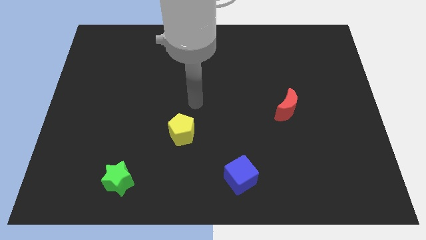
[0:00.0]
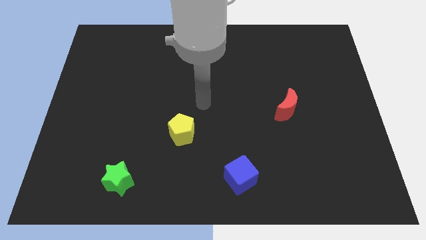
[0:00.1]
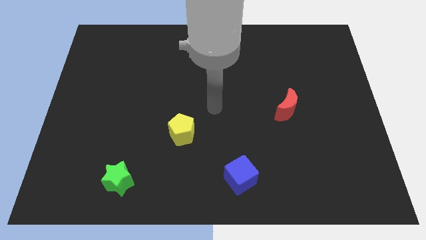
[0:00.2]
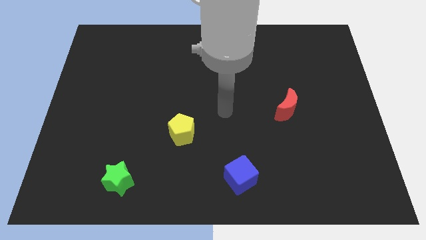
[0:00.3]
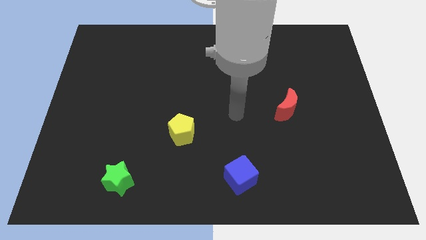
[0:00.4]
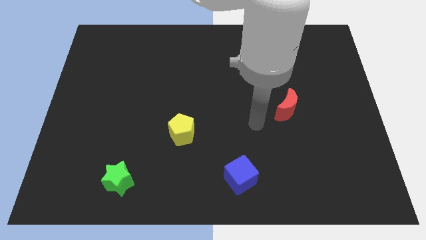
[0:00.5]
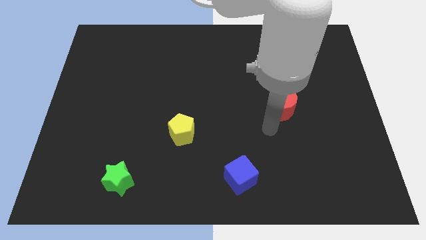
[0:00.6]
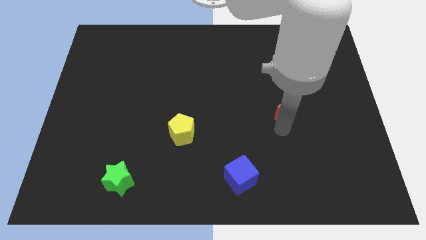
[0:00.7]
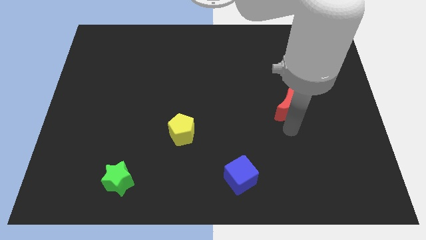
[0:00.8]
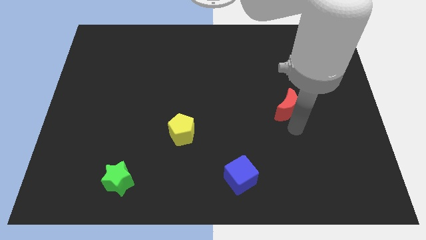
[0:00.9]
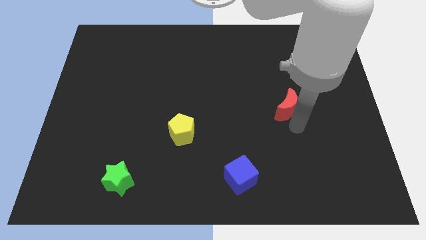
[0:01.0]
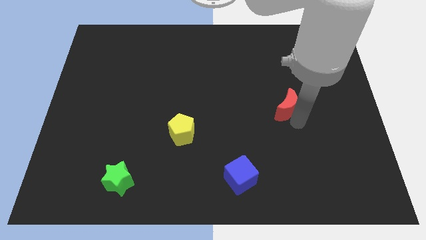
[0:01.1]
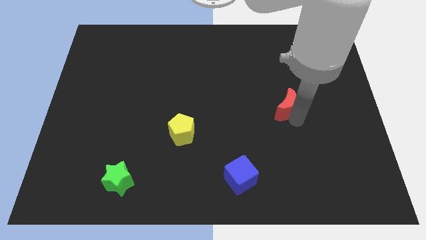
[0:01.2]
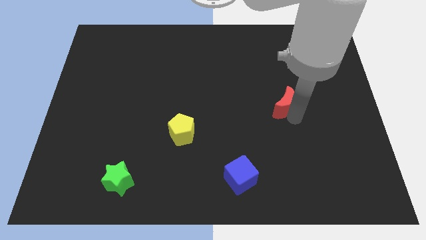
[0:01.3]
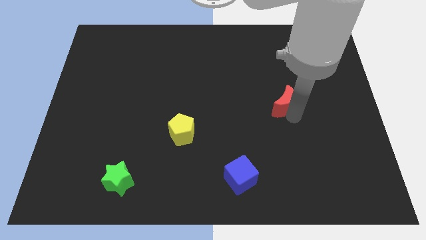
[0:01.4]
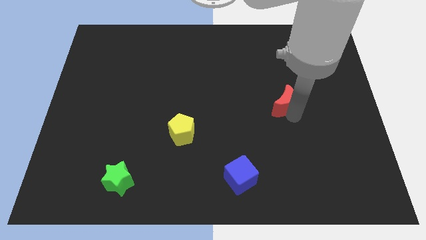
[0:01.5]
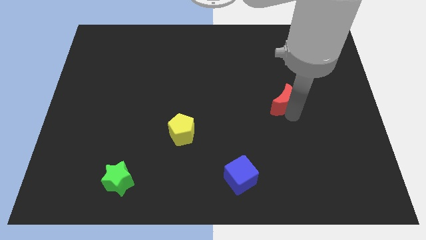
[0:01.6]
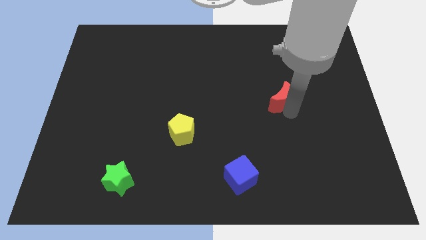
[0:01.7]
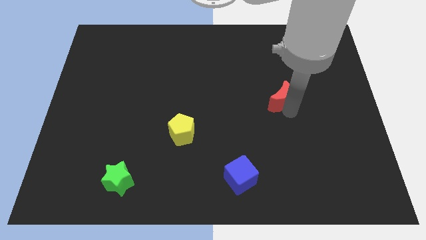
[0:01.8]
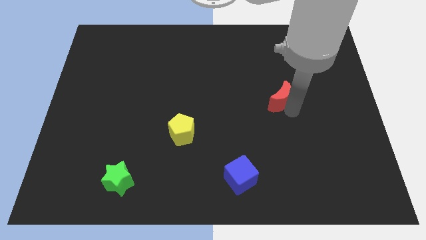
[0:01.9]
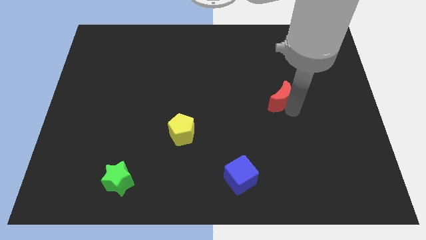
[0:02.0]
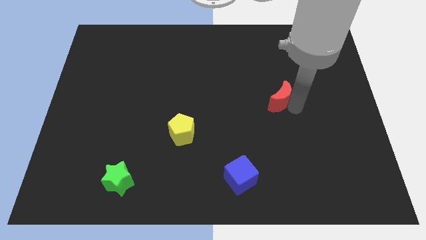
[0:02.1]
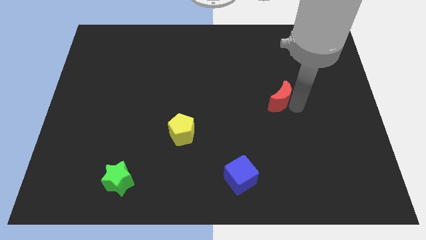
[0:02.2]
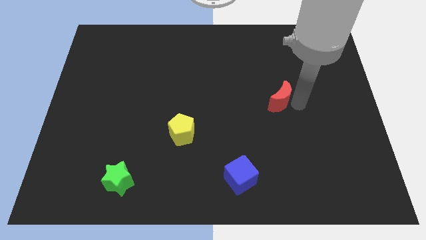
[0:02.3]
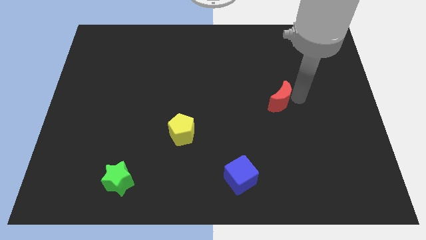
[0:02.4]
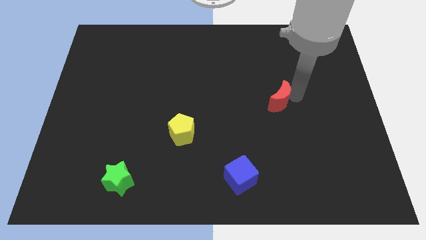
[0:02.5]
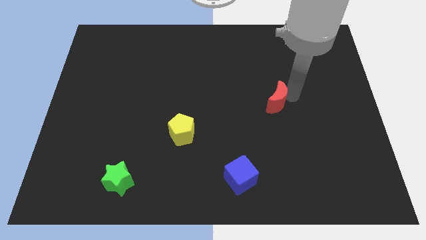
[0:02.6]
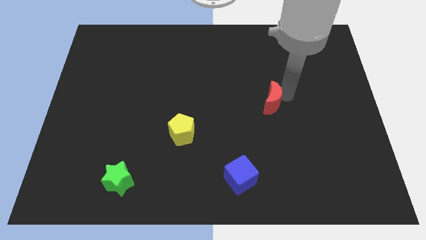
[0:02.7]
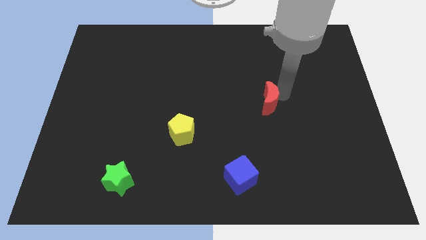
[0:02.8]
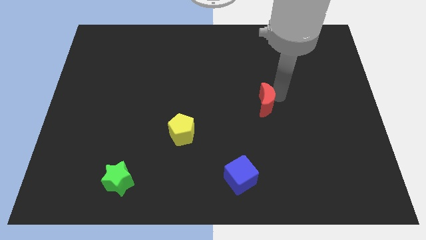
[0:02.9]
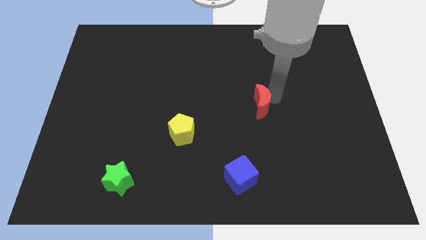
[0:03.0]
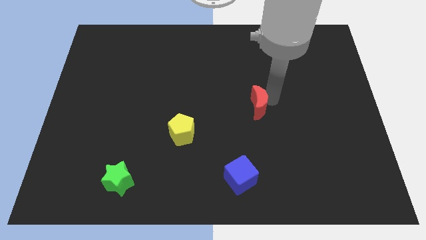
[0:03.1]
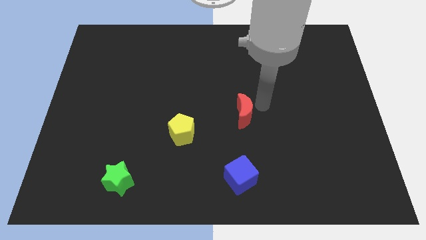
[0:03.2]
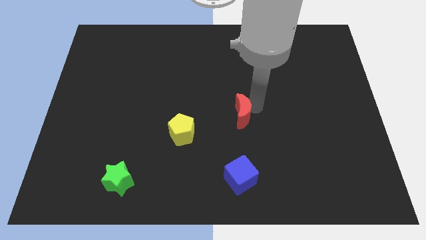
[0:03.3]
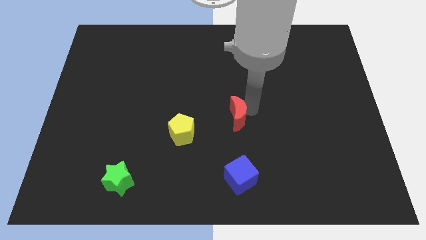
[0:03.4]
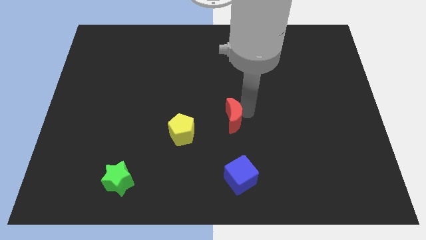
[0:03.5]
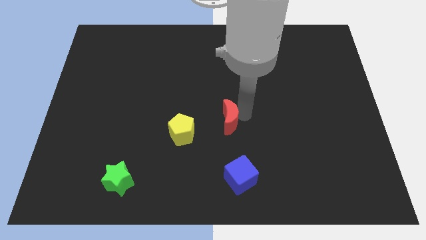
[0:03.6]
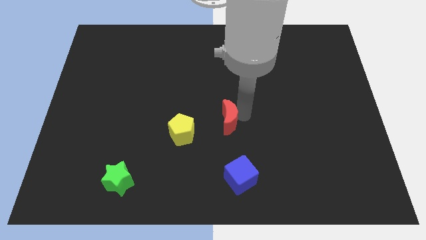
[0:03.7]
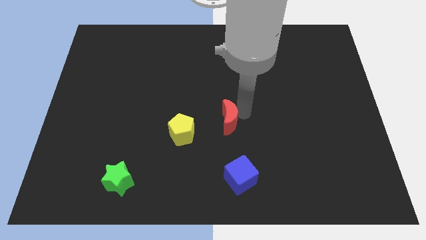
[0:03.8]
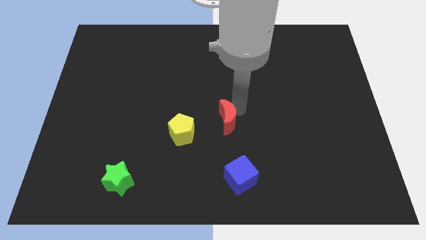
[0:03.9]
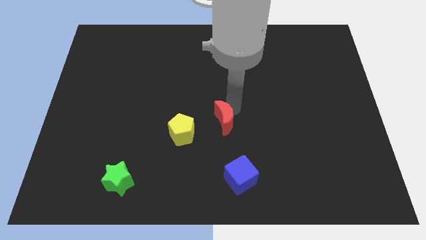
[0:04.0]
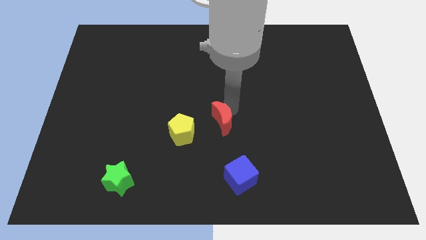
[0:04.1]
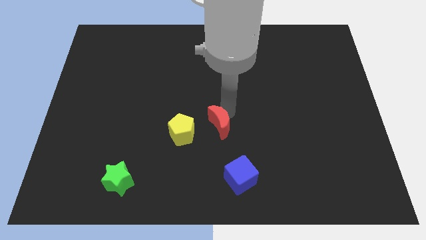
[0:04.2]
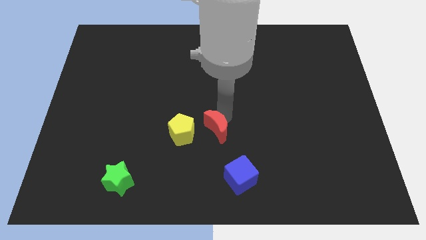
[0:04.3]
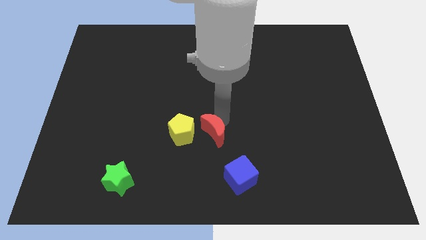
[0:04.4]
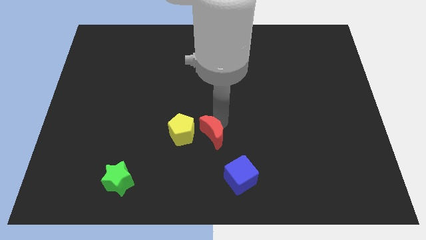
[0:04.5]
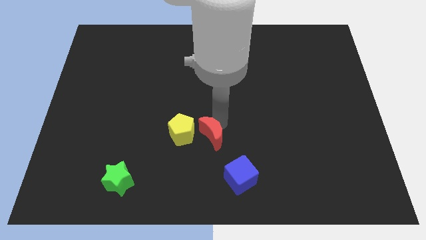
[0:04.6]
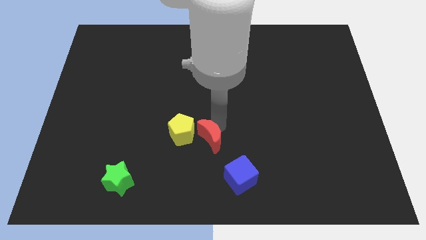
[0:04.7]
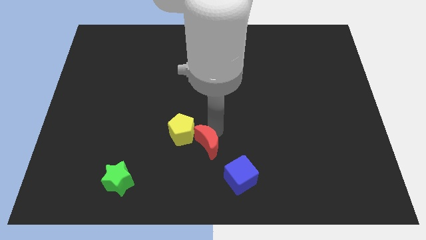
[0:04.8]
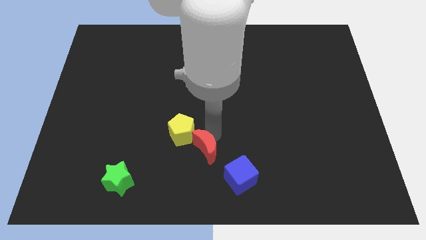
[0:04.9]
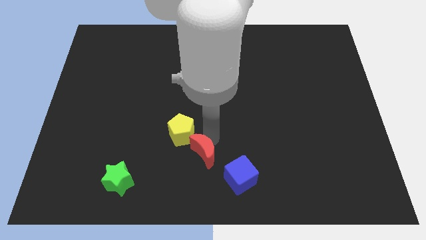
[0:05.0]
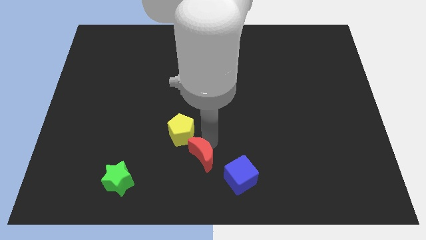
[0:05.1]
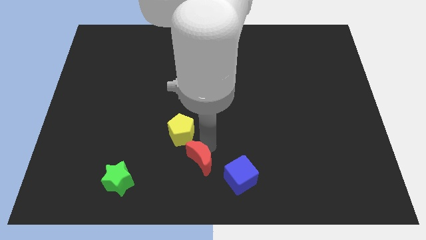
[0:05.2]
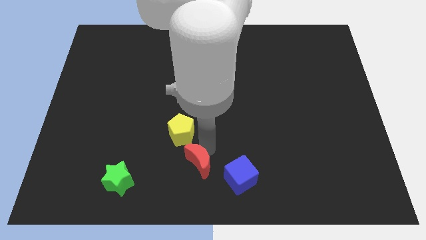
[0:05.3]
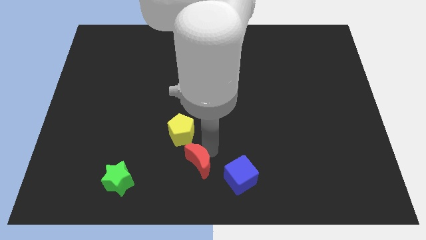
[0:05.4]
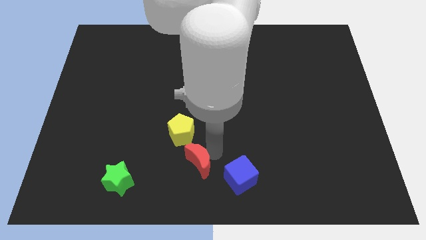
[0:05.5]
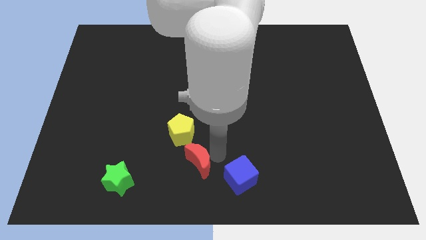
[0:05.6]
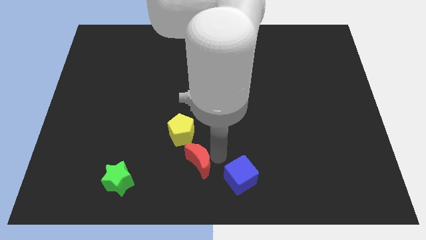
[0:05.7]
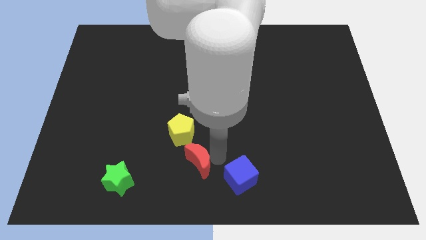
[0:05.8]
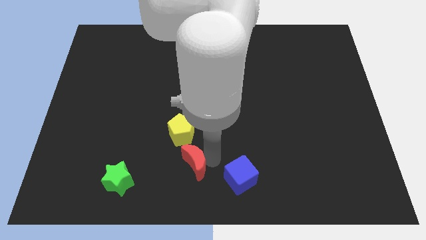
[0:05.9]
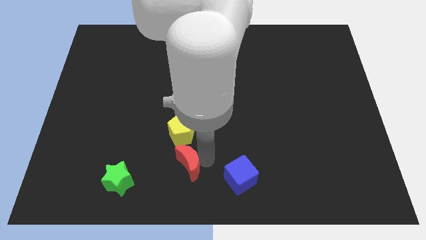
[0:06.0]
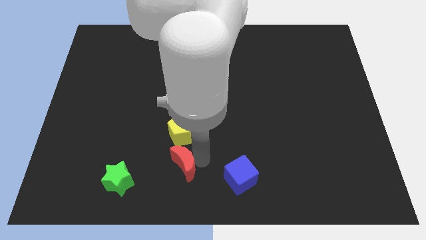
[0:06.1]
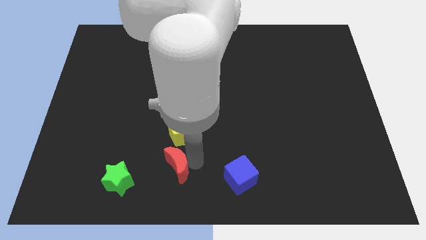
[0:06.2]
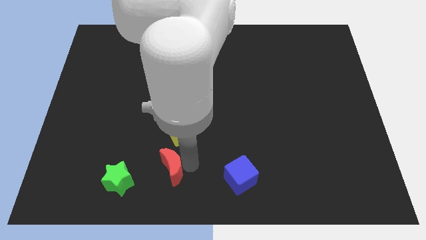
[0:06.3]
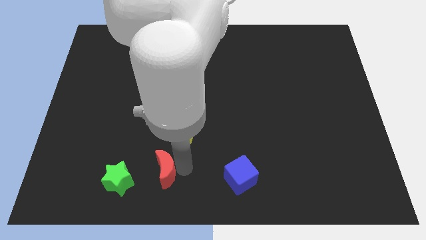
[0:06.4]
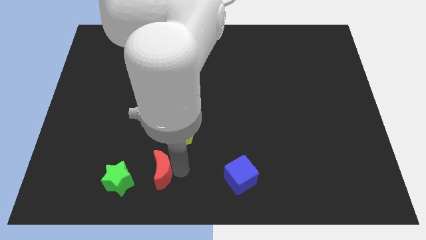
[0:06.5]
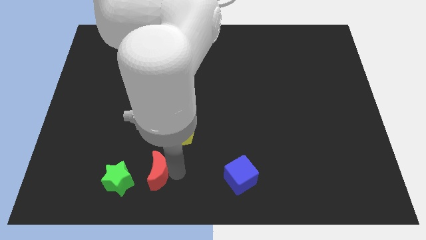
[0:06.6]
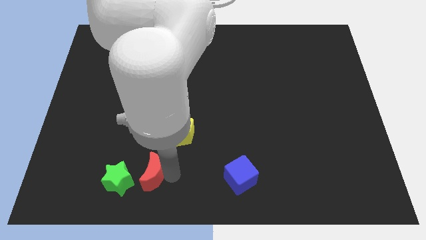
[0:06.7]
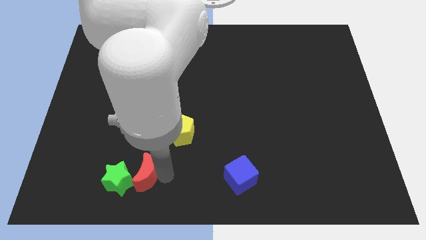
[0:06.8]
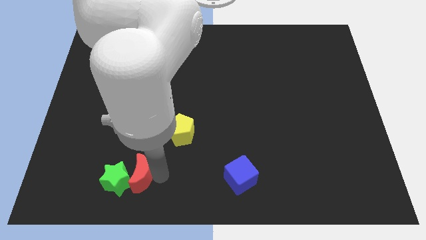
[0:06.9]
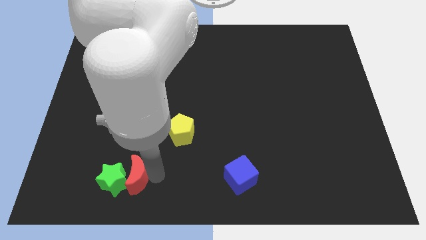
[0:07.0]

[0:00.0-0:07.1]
move the red moon close to the green block

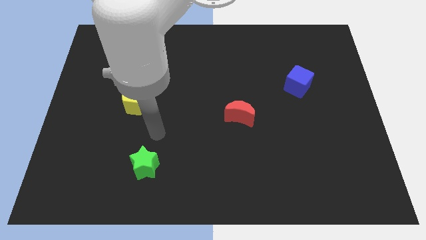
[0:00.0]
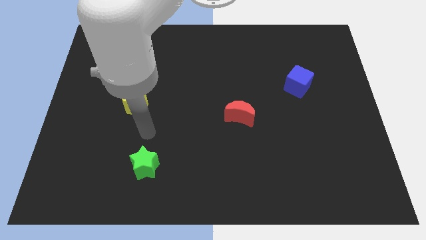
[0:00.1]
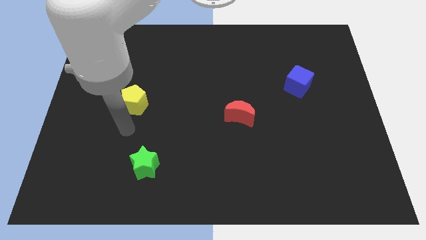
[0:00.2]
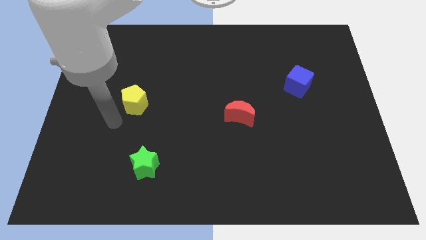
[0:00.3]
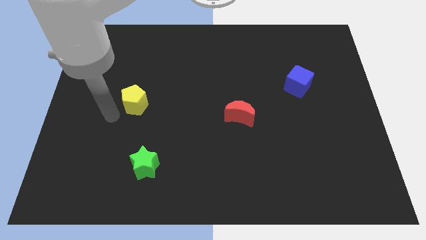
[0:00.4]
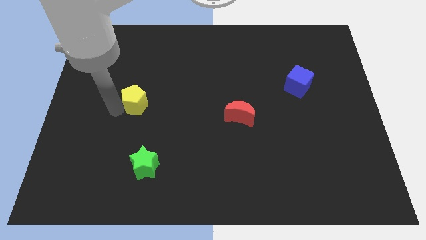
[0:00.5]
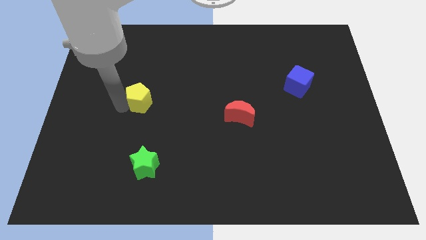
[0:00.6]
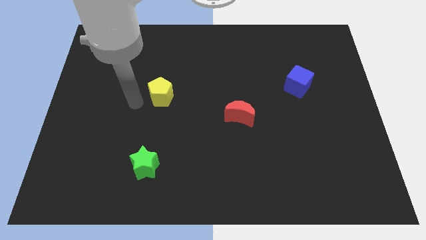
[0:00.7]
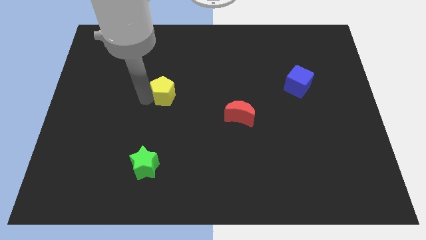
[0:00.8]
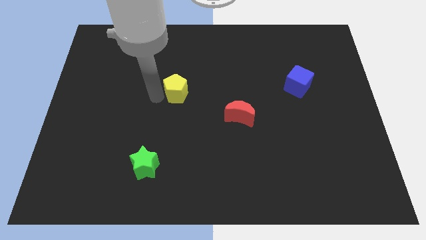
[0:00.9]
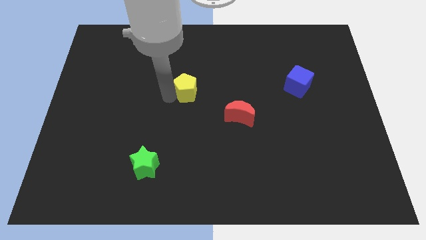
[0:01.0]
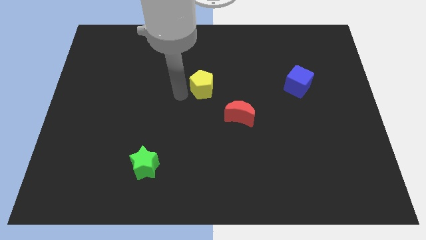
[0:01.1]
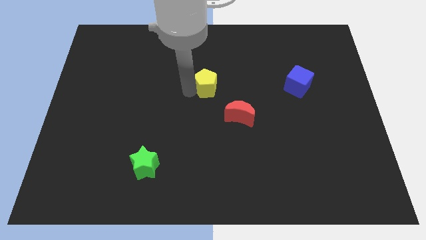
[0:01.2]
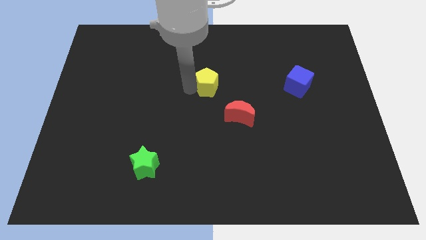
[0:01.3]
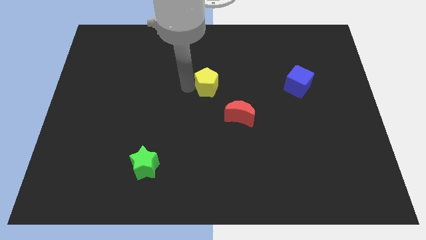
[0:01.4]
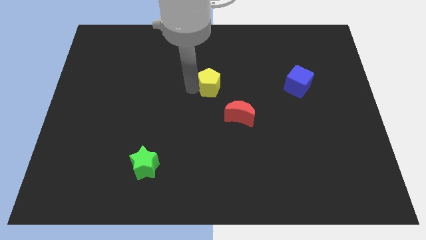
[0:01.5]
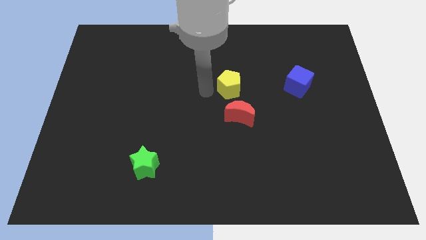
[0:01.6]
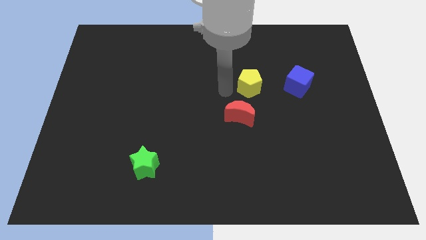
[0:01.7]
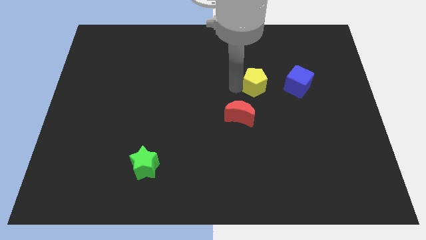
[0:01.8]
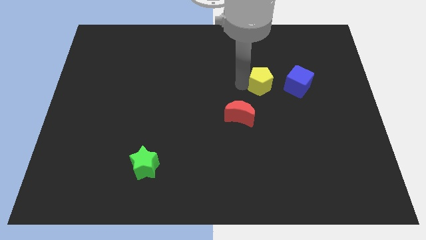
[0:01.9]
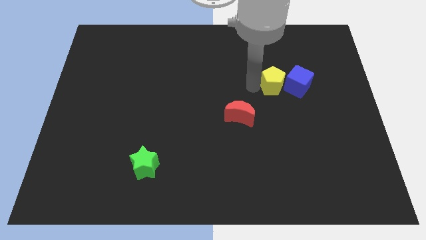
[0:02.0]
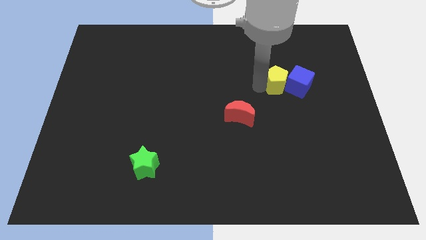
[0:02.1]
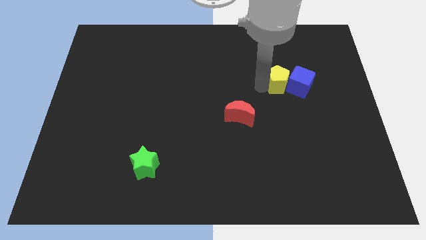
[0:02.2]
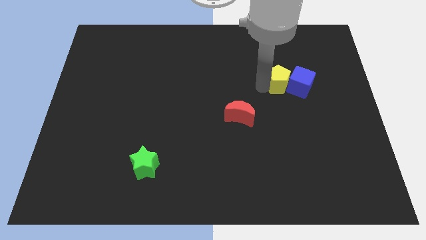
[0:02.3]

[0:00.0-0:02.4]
put the pentagon towards the blue cube
